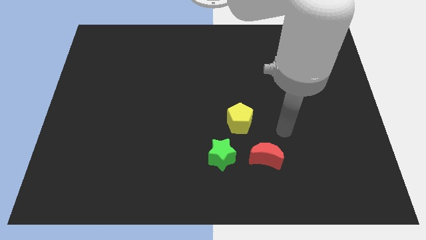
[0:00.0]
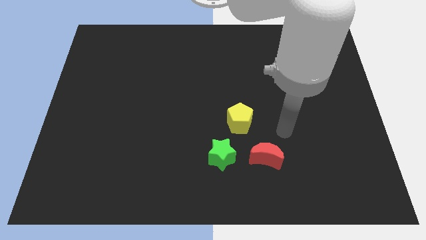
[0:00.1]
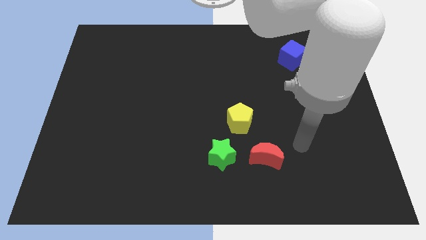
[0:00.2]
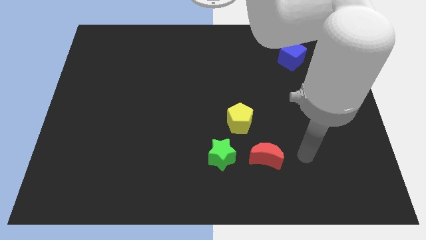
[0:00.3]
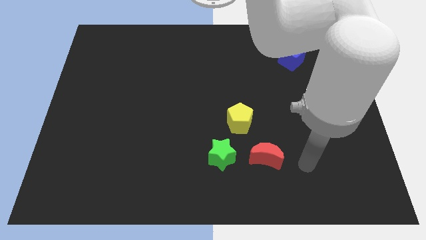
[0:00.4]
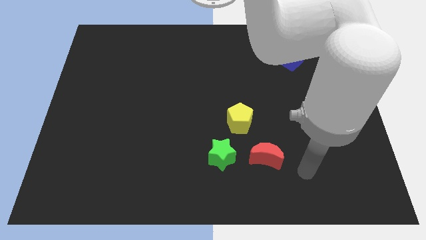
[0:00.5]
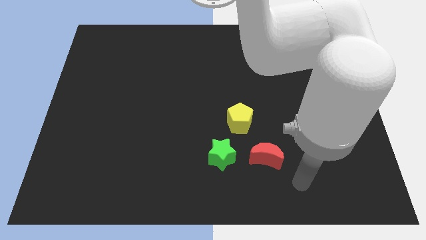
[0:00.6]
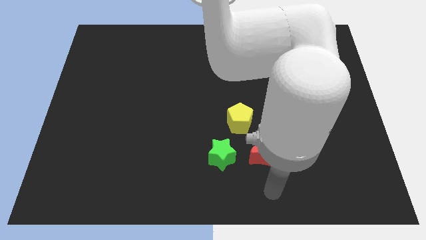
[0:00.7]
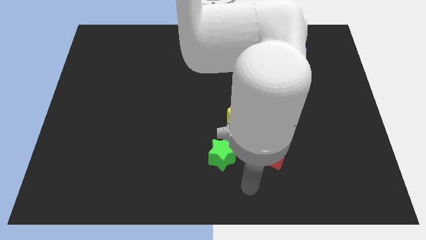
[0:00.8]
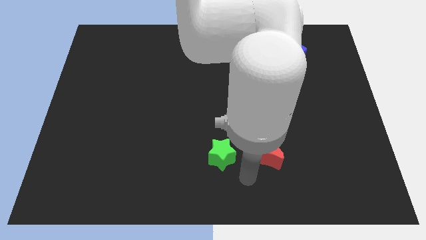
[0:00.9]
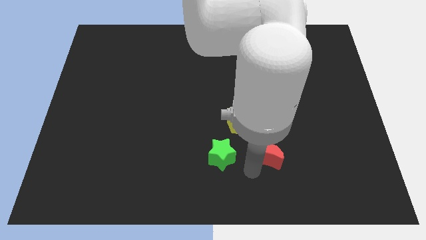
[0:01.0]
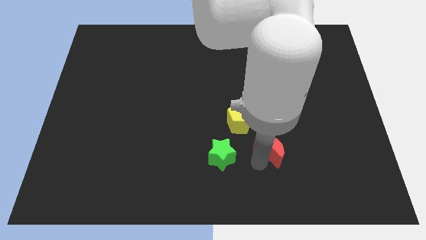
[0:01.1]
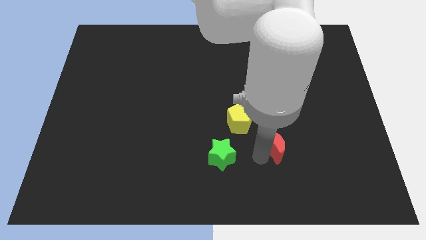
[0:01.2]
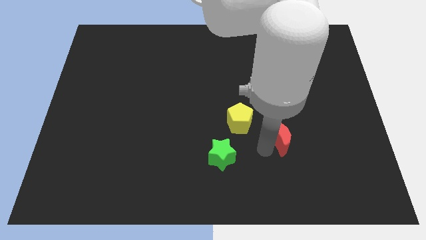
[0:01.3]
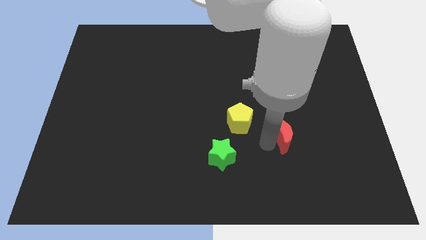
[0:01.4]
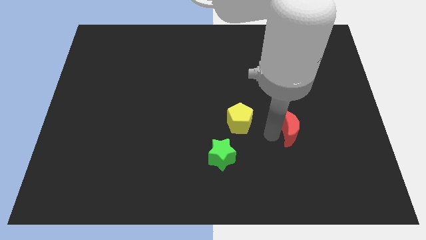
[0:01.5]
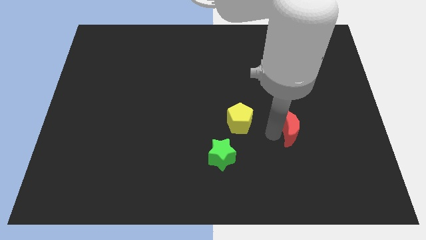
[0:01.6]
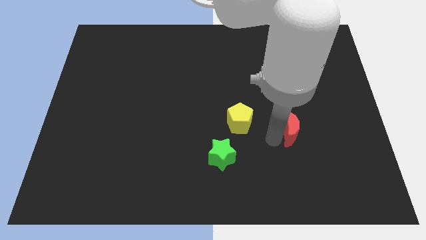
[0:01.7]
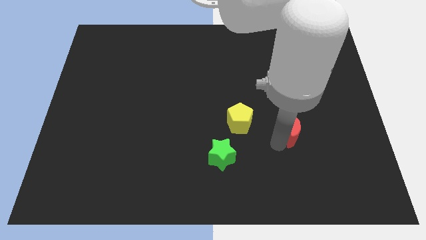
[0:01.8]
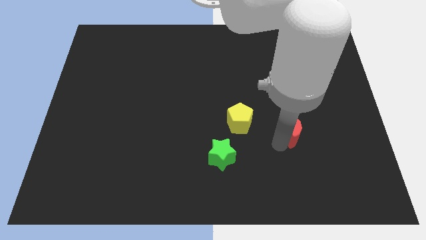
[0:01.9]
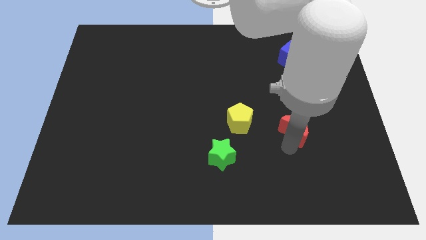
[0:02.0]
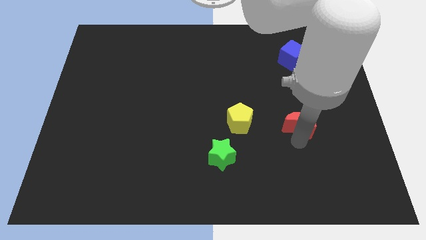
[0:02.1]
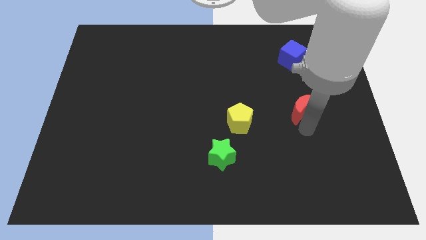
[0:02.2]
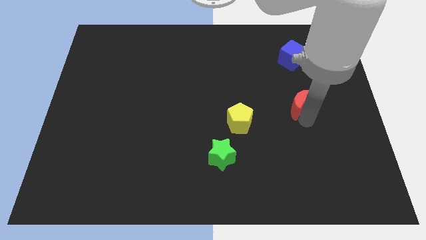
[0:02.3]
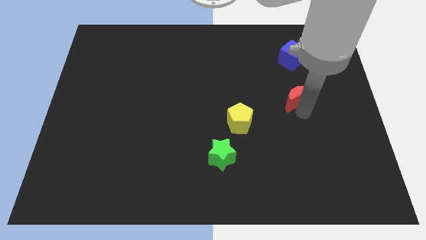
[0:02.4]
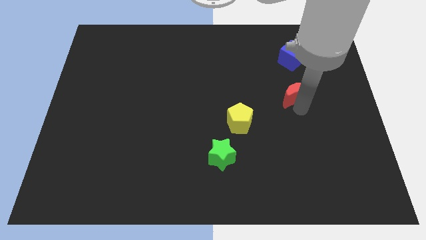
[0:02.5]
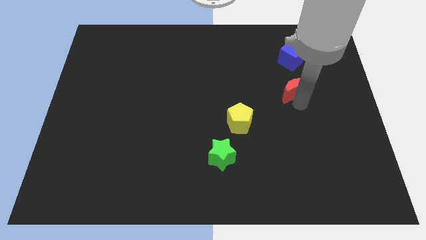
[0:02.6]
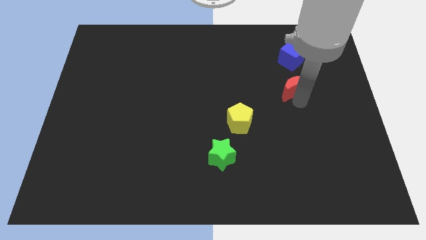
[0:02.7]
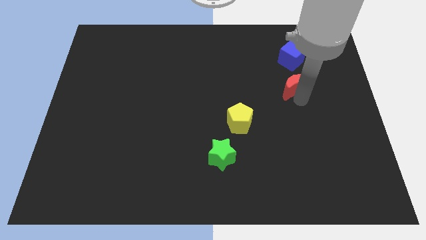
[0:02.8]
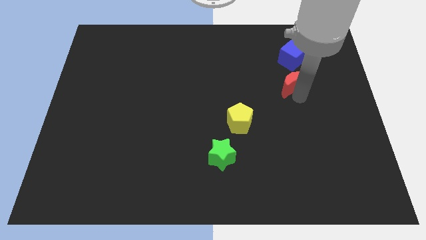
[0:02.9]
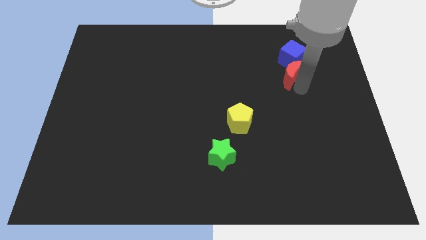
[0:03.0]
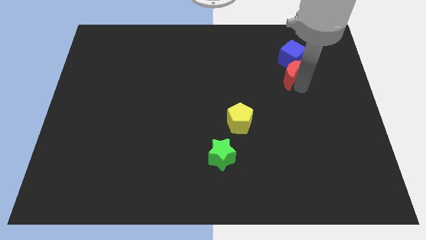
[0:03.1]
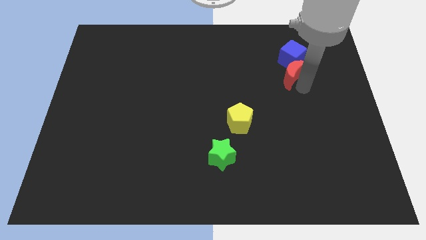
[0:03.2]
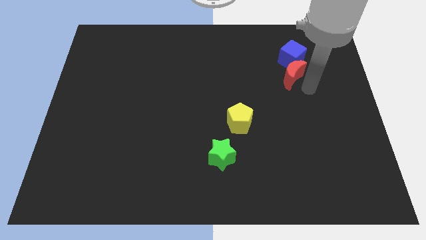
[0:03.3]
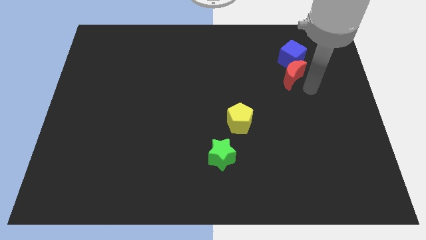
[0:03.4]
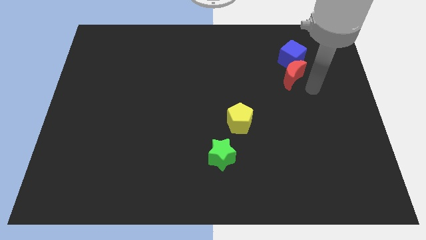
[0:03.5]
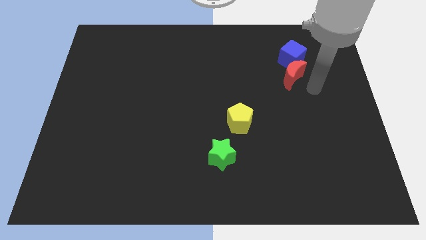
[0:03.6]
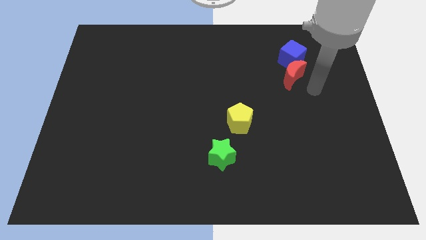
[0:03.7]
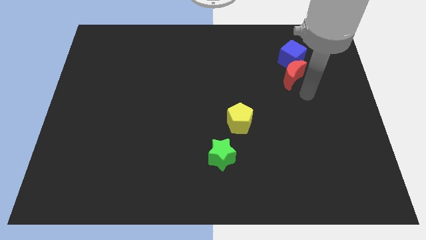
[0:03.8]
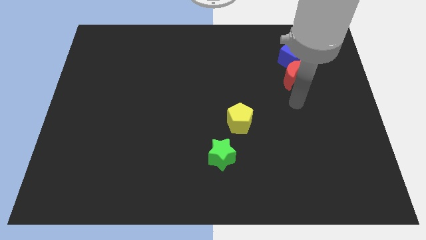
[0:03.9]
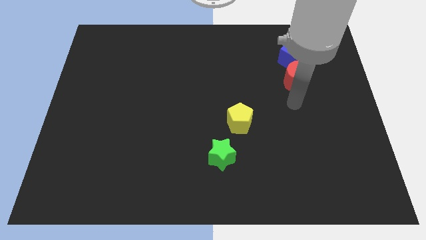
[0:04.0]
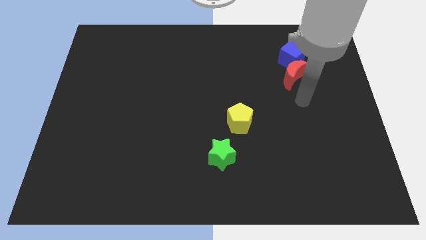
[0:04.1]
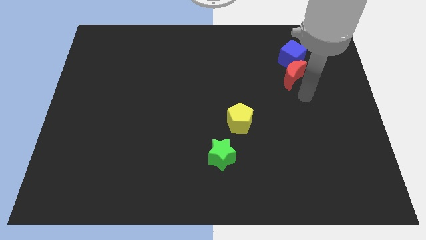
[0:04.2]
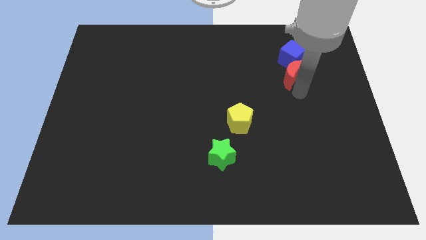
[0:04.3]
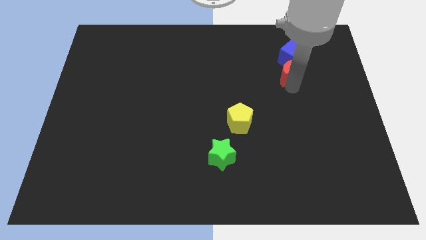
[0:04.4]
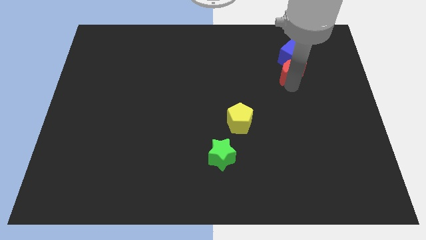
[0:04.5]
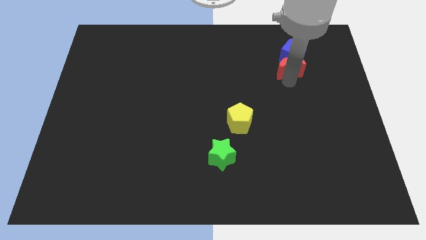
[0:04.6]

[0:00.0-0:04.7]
move the moon next to the blue block

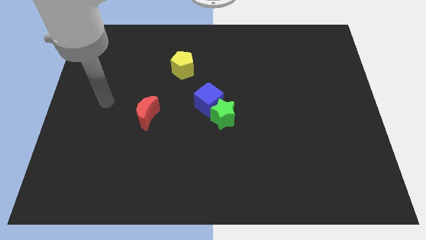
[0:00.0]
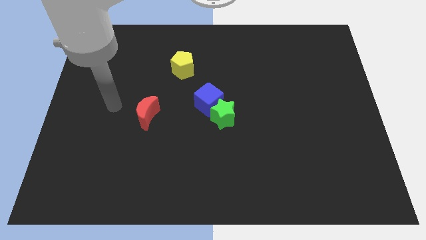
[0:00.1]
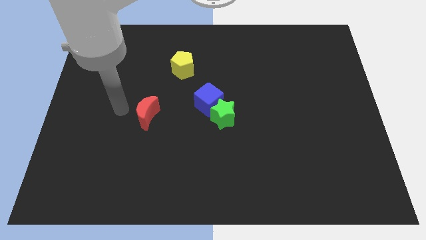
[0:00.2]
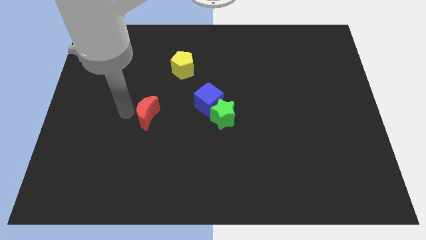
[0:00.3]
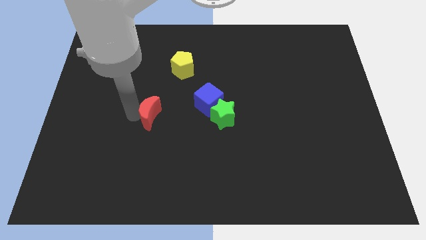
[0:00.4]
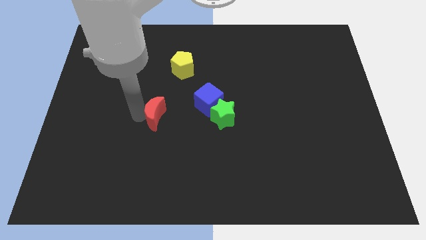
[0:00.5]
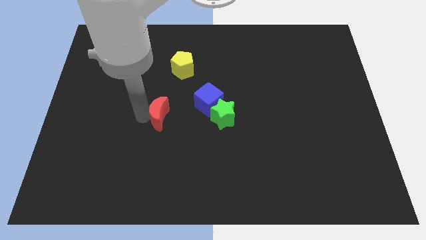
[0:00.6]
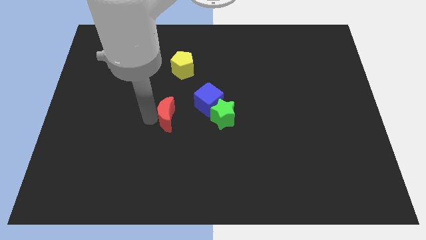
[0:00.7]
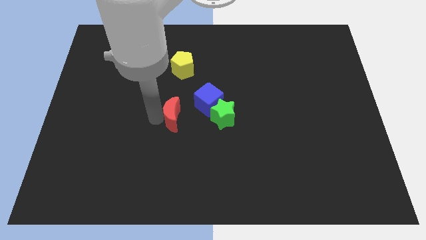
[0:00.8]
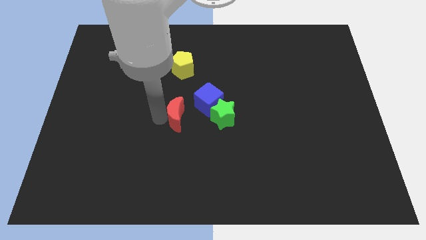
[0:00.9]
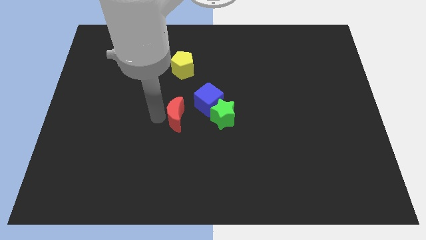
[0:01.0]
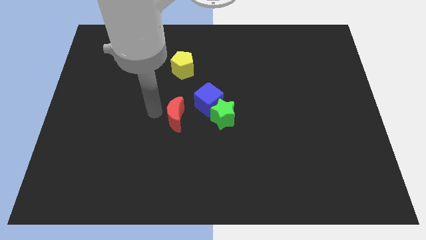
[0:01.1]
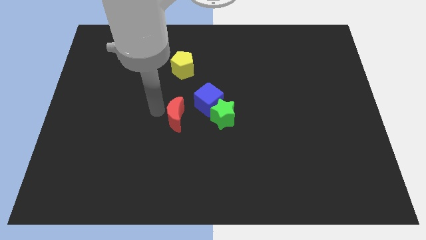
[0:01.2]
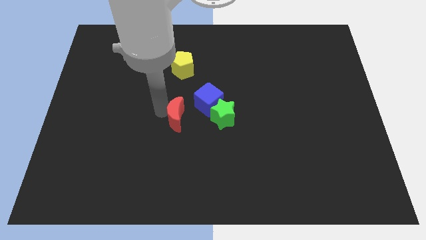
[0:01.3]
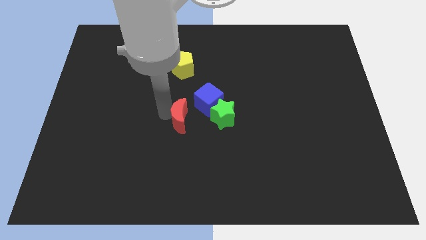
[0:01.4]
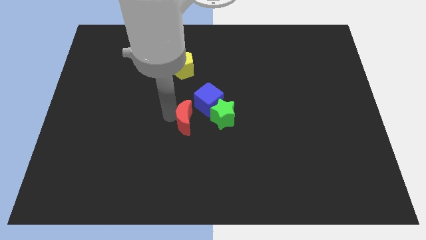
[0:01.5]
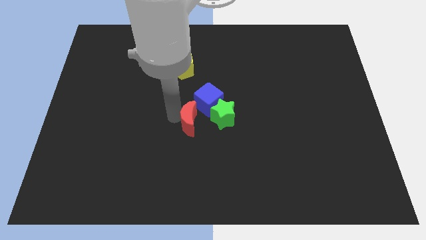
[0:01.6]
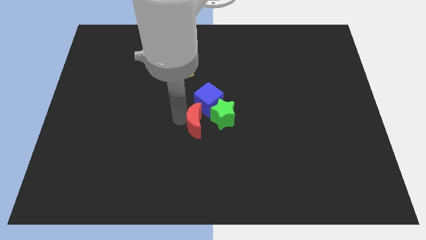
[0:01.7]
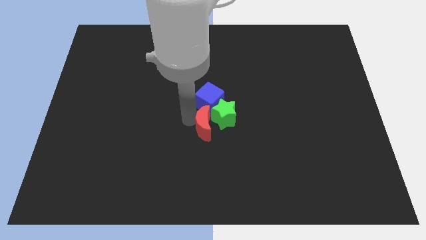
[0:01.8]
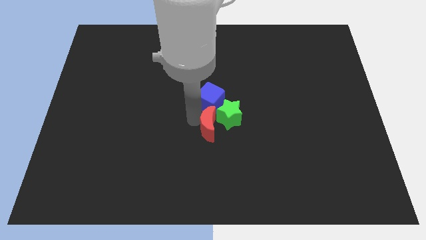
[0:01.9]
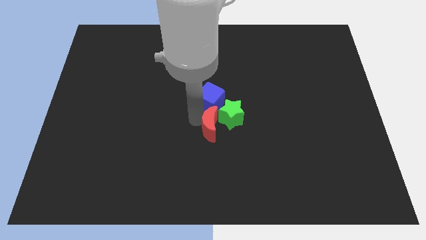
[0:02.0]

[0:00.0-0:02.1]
push the moon close to the star

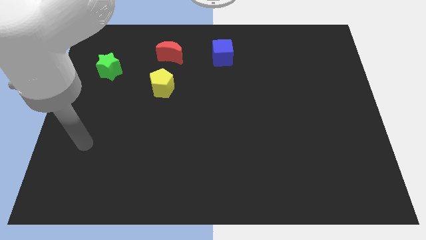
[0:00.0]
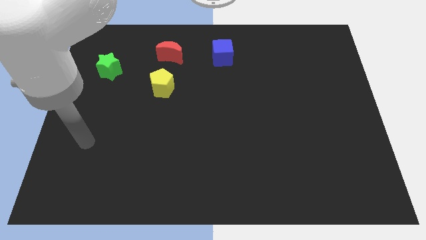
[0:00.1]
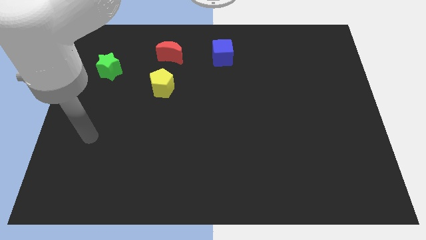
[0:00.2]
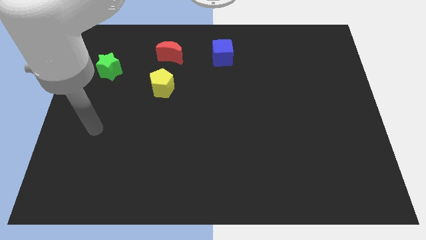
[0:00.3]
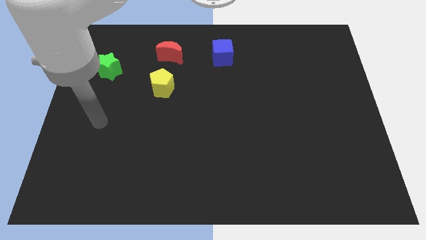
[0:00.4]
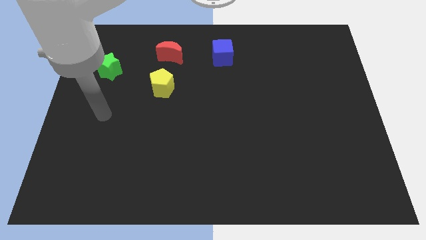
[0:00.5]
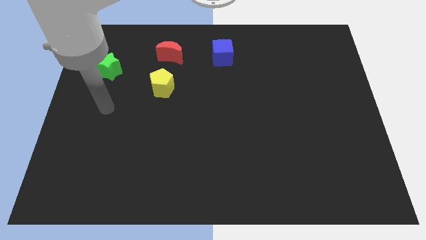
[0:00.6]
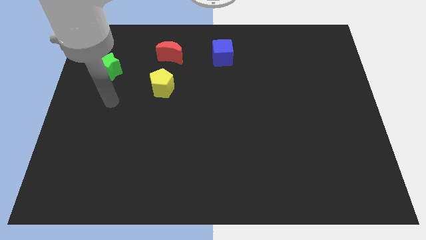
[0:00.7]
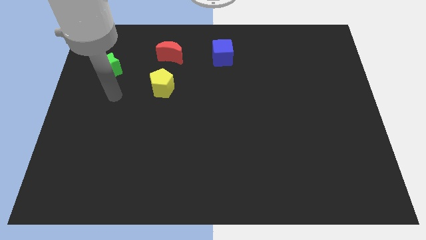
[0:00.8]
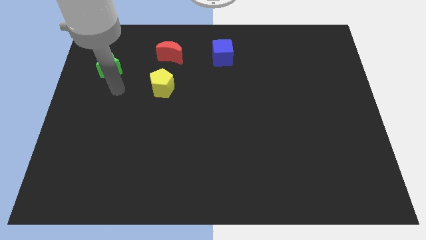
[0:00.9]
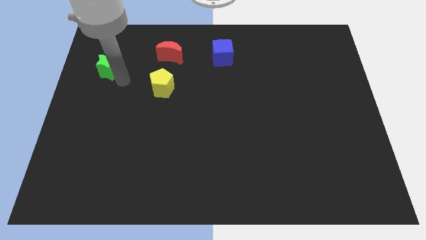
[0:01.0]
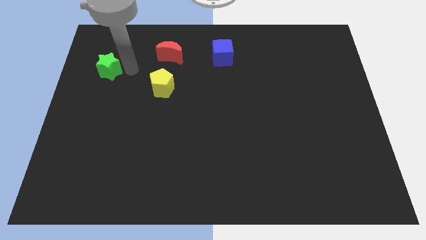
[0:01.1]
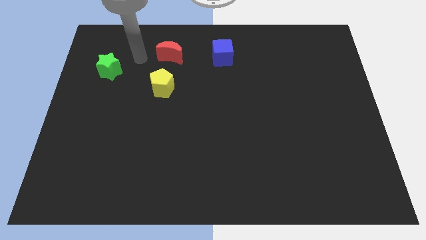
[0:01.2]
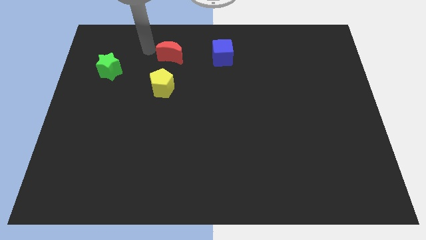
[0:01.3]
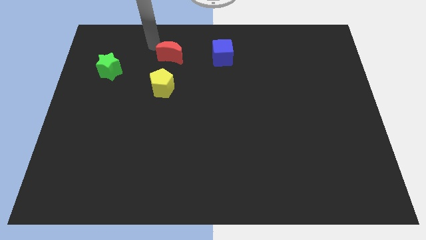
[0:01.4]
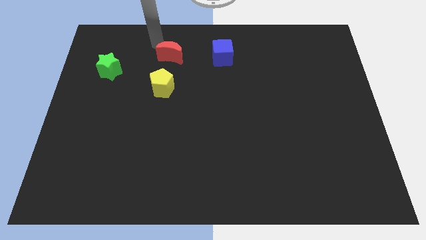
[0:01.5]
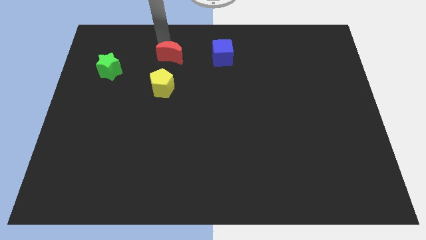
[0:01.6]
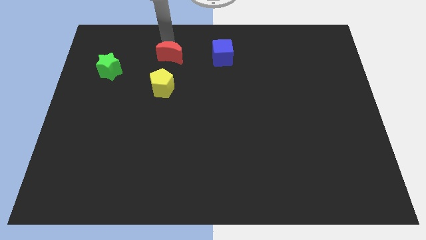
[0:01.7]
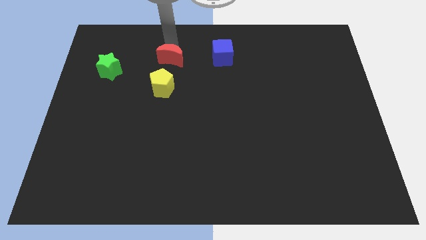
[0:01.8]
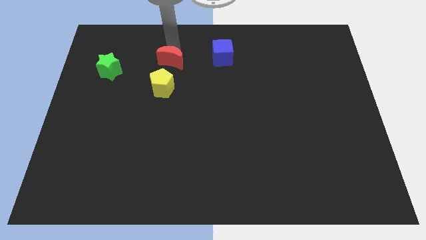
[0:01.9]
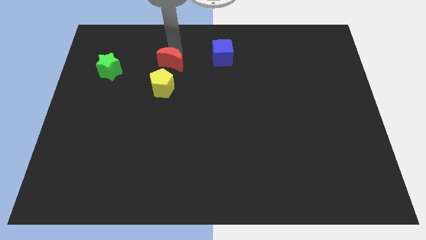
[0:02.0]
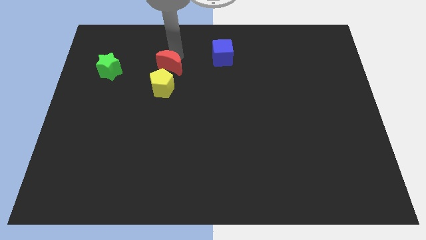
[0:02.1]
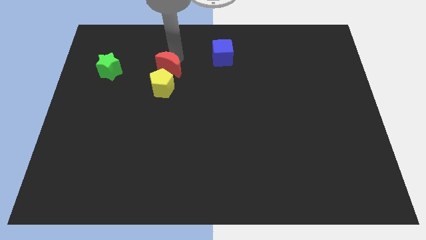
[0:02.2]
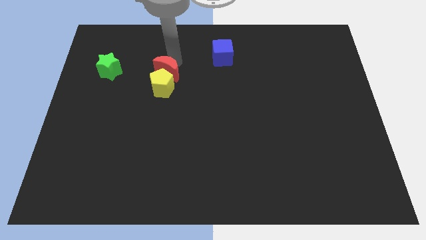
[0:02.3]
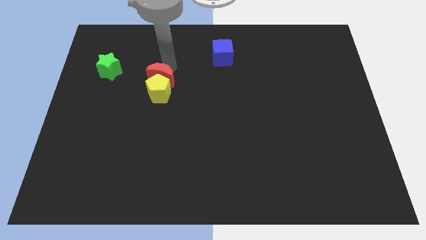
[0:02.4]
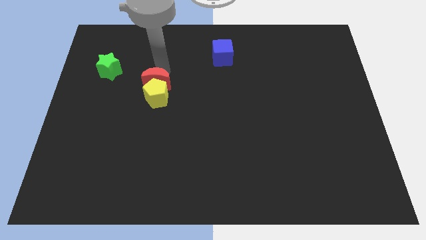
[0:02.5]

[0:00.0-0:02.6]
put the red block towards the yellow pentagon
